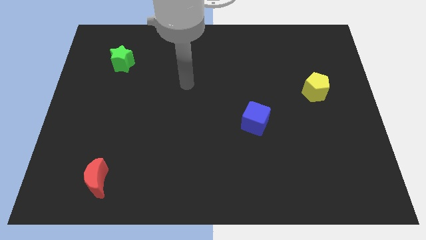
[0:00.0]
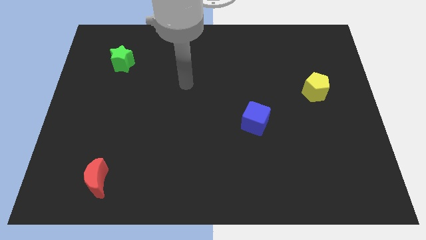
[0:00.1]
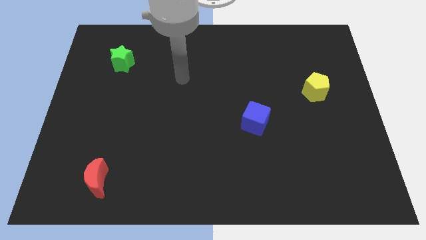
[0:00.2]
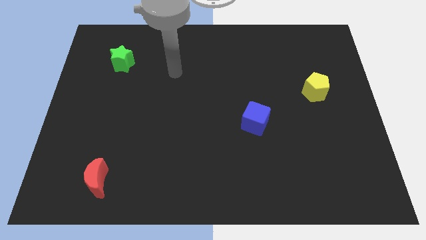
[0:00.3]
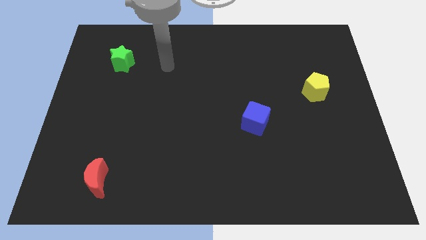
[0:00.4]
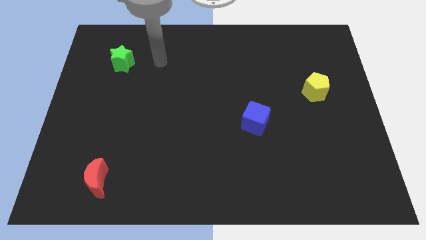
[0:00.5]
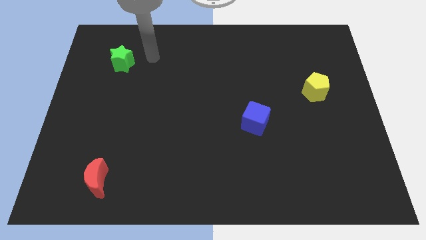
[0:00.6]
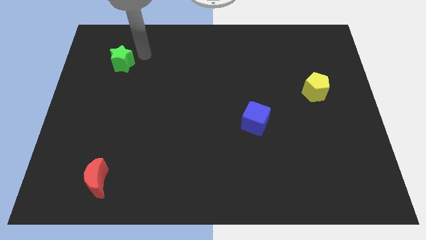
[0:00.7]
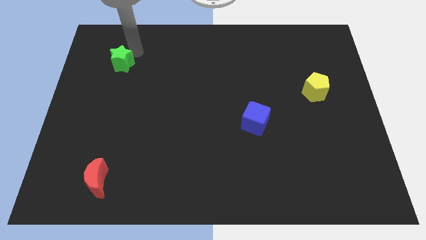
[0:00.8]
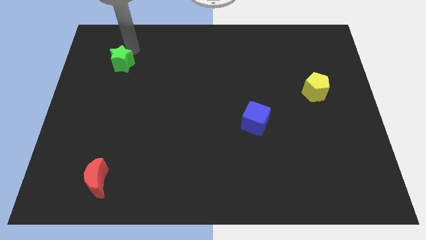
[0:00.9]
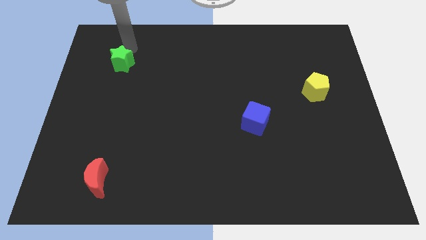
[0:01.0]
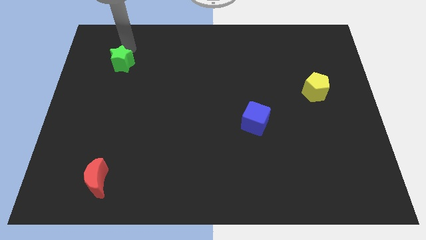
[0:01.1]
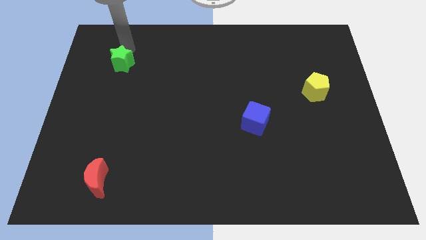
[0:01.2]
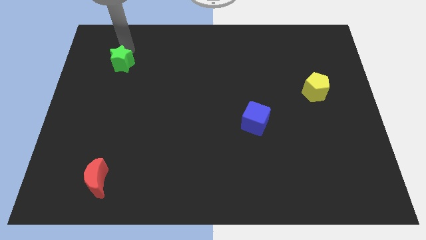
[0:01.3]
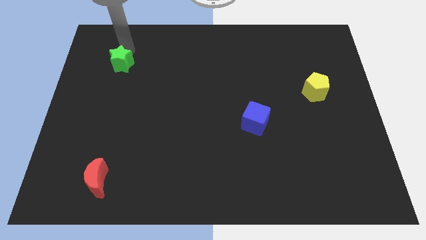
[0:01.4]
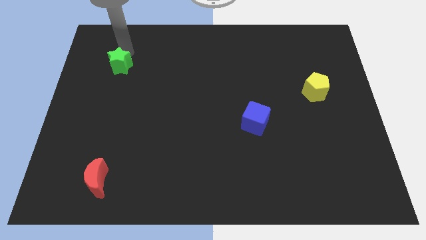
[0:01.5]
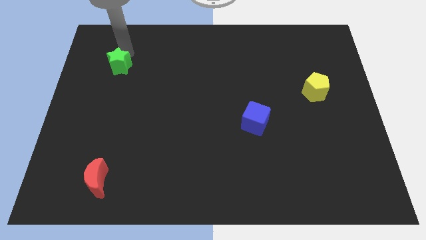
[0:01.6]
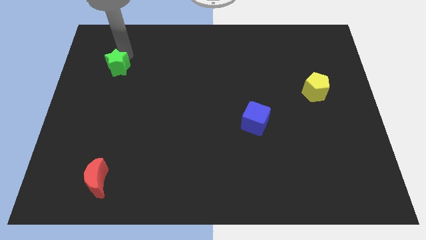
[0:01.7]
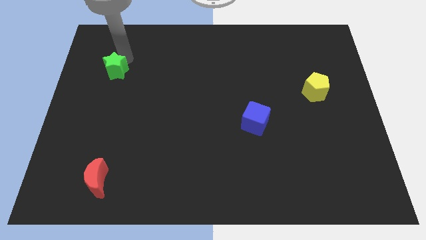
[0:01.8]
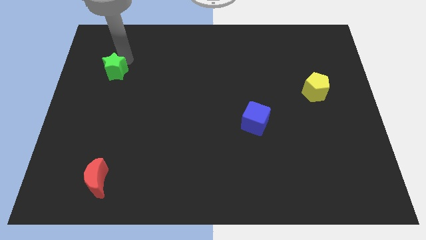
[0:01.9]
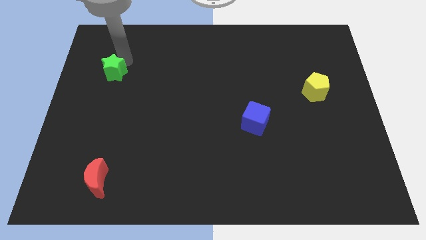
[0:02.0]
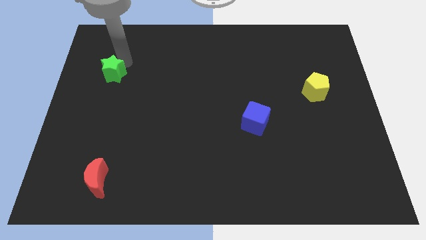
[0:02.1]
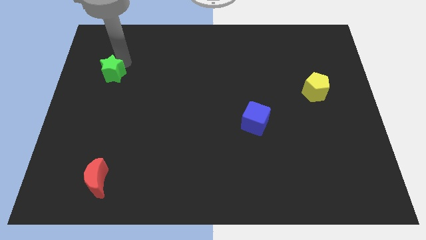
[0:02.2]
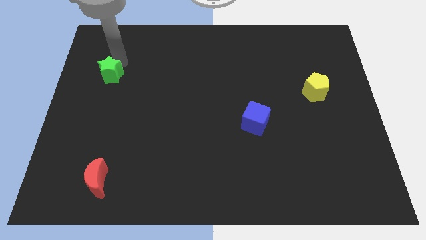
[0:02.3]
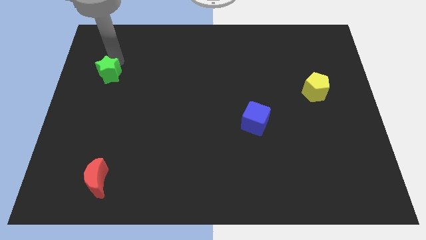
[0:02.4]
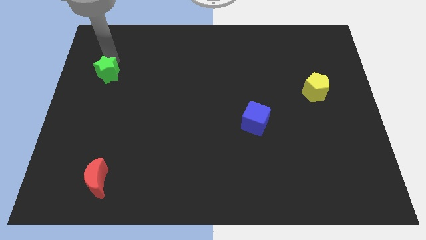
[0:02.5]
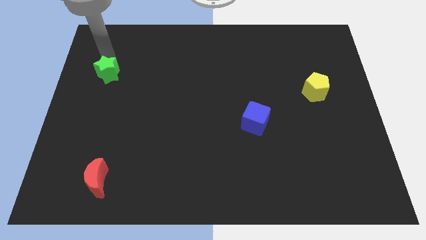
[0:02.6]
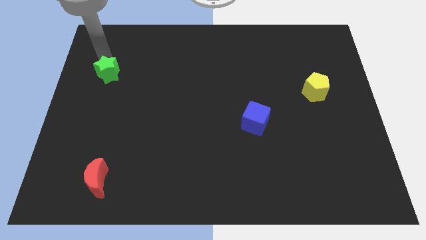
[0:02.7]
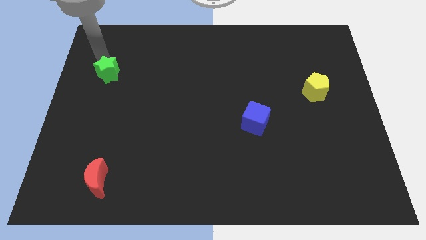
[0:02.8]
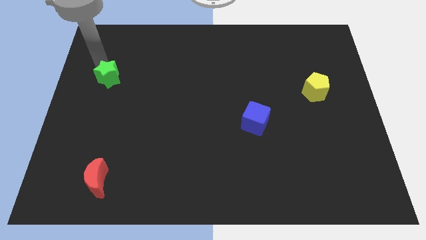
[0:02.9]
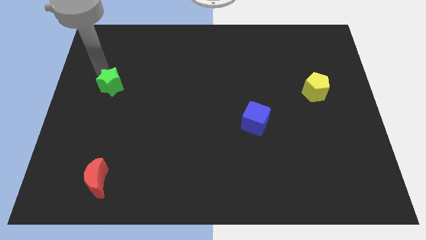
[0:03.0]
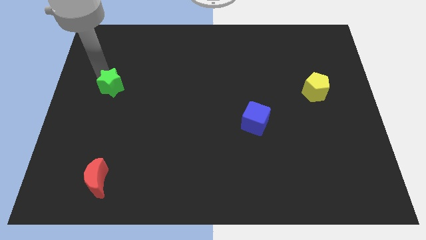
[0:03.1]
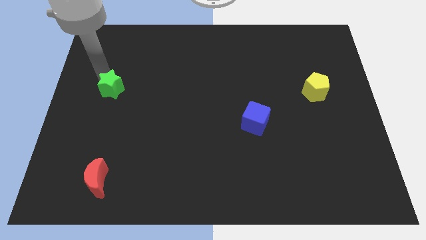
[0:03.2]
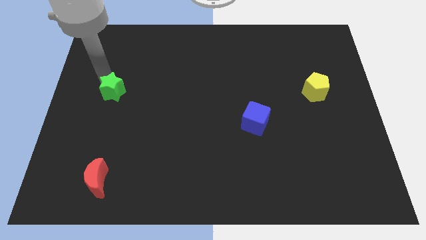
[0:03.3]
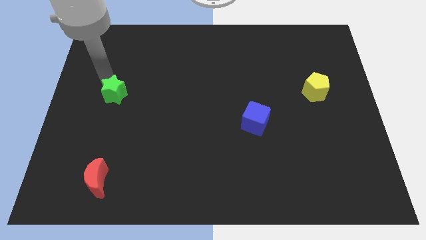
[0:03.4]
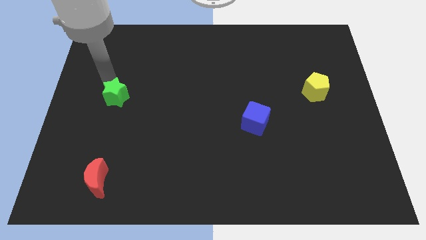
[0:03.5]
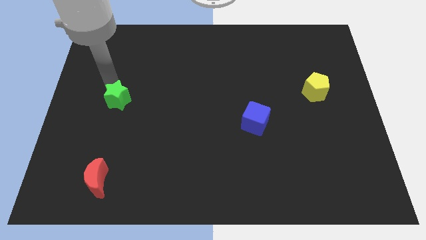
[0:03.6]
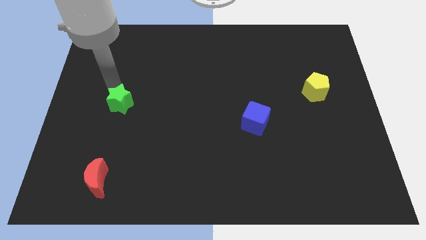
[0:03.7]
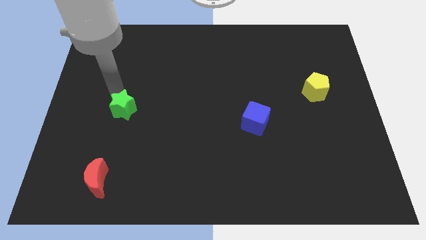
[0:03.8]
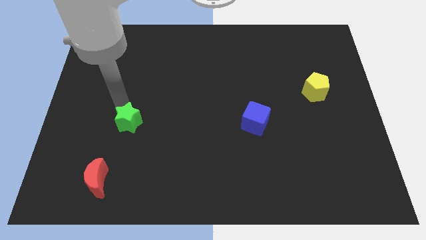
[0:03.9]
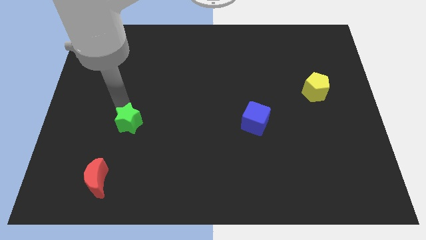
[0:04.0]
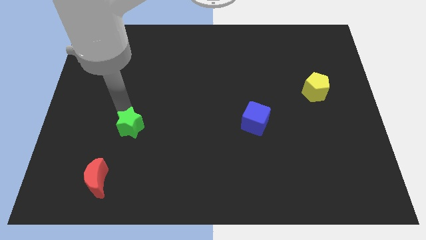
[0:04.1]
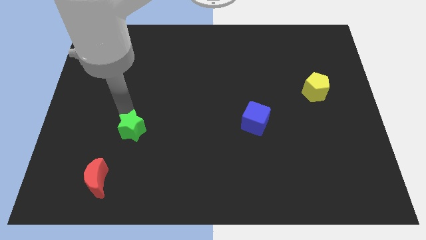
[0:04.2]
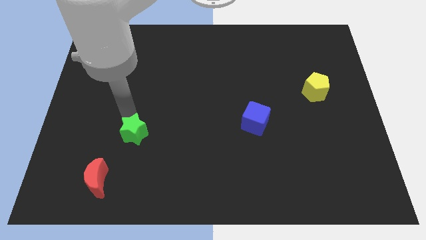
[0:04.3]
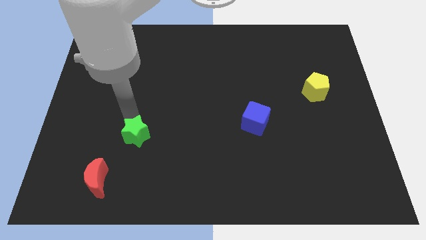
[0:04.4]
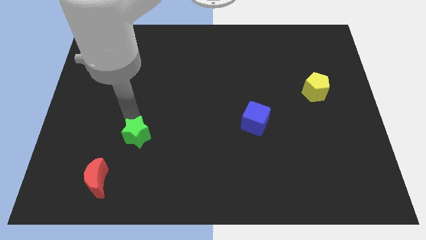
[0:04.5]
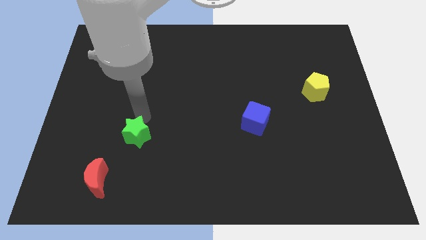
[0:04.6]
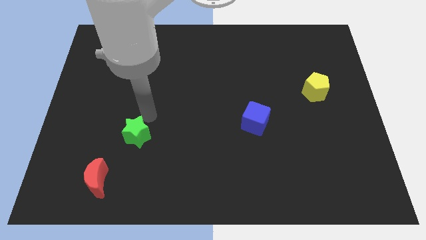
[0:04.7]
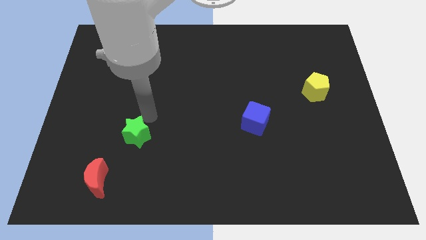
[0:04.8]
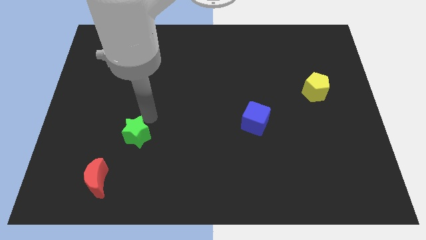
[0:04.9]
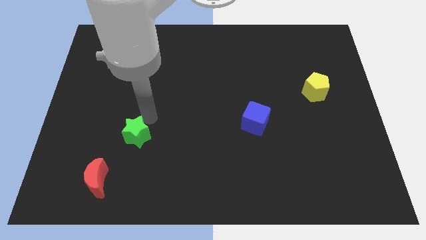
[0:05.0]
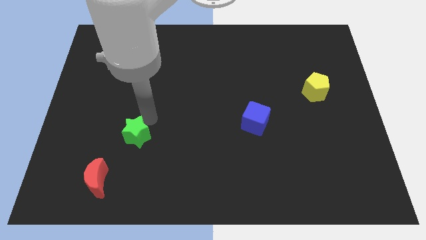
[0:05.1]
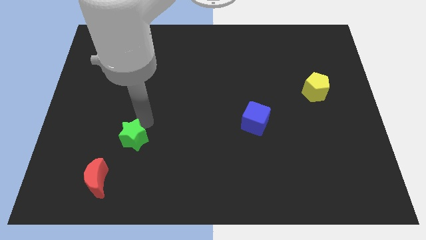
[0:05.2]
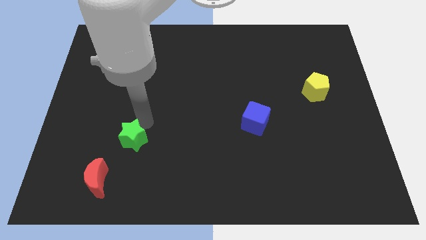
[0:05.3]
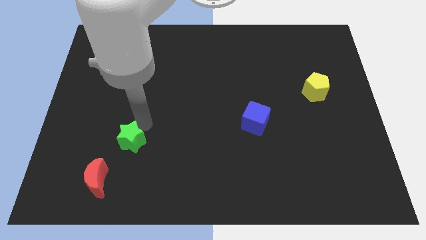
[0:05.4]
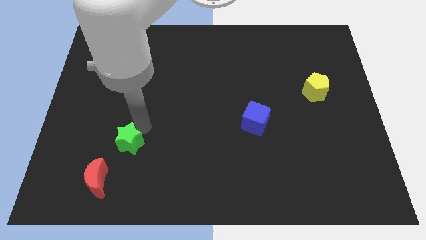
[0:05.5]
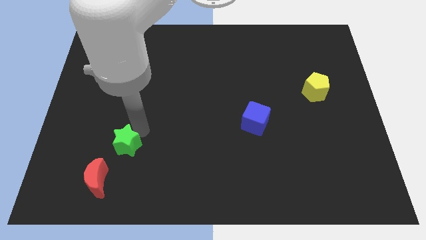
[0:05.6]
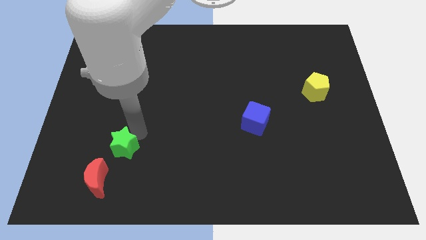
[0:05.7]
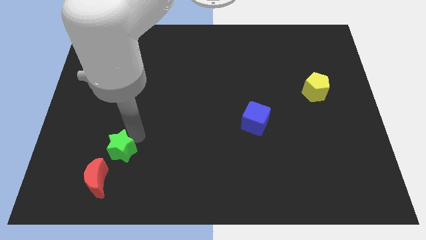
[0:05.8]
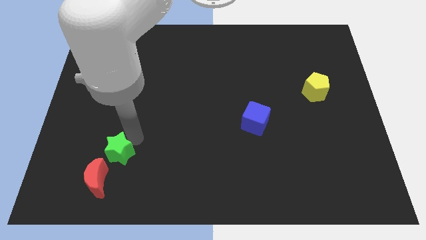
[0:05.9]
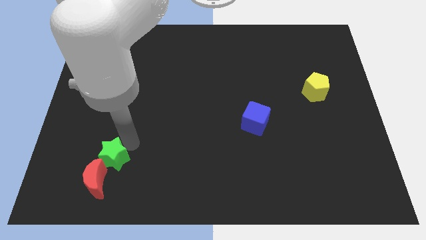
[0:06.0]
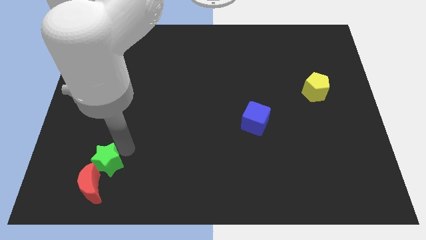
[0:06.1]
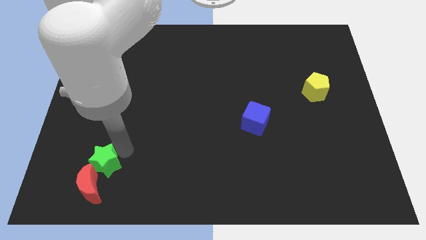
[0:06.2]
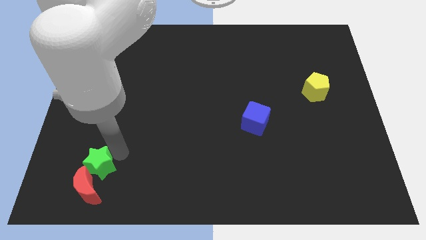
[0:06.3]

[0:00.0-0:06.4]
push the green star next to the moon

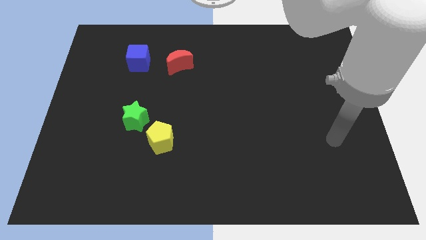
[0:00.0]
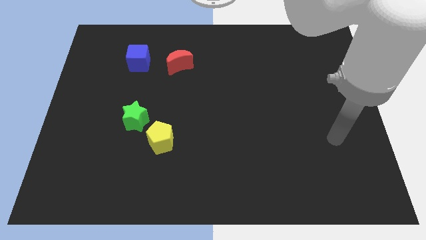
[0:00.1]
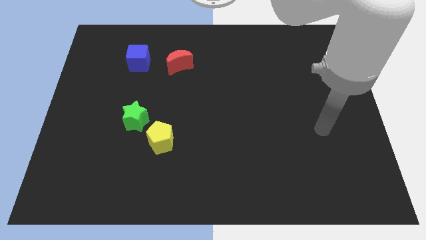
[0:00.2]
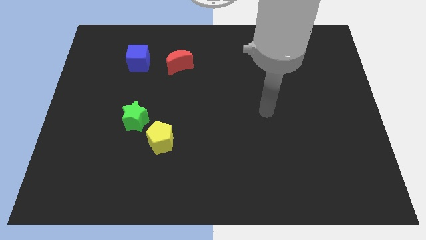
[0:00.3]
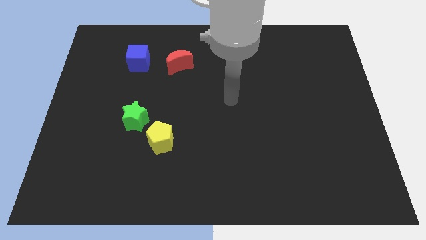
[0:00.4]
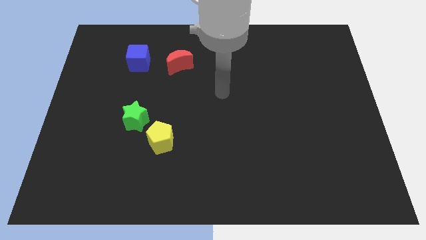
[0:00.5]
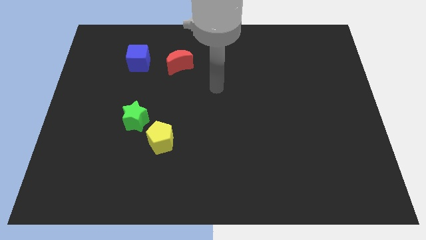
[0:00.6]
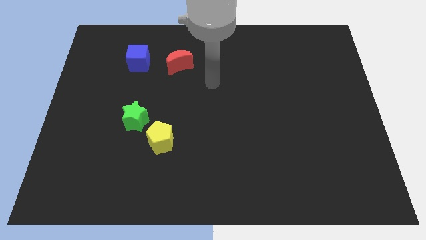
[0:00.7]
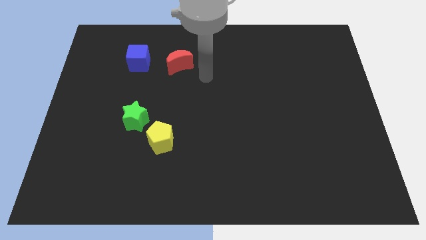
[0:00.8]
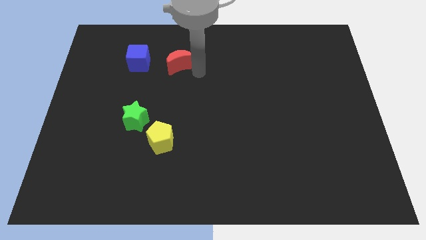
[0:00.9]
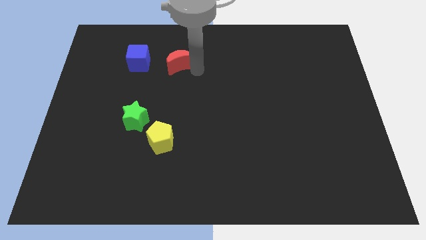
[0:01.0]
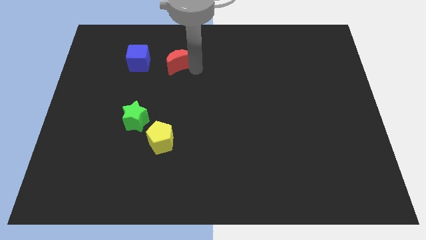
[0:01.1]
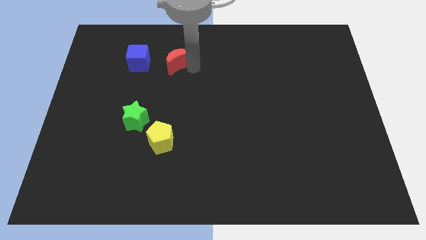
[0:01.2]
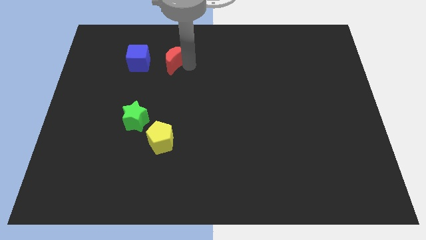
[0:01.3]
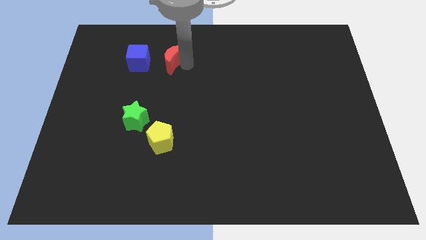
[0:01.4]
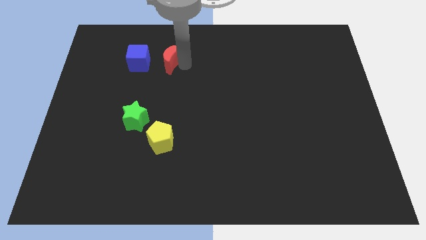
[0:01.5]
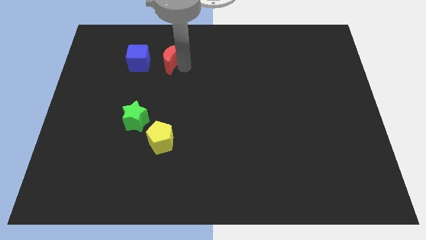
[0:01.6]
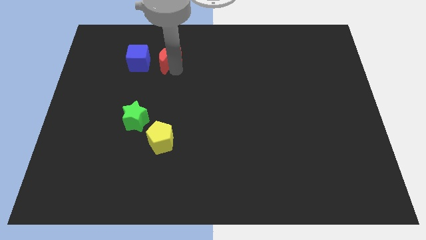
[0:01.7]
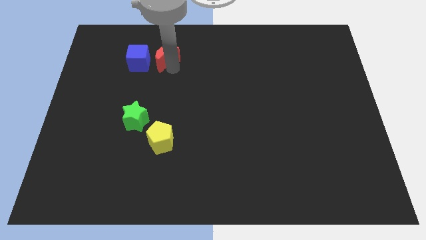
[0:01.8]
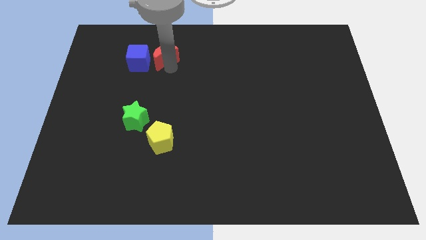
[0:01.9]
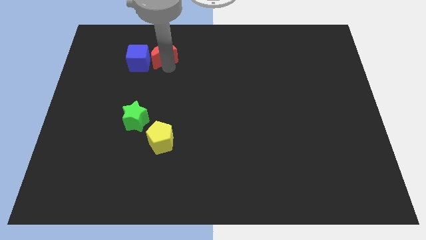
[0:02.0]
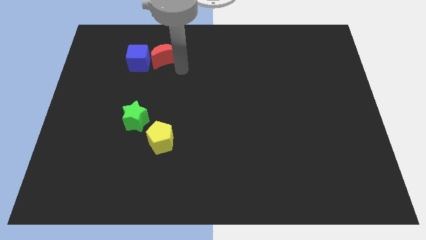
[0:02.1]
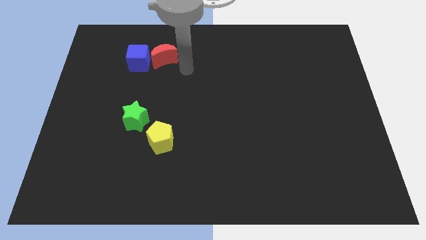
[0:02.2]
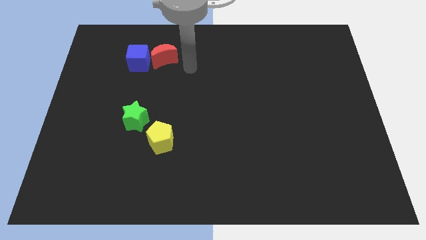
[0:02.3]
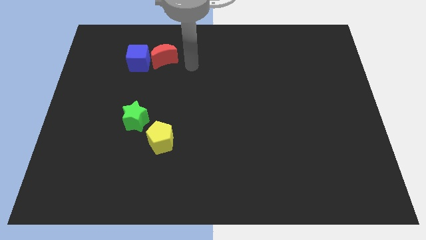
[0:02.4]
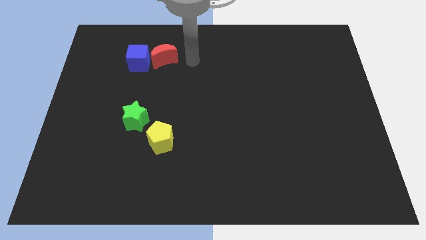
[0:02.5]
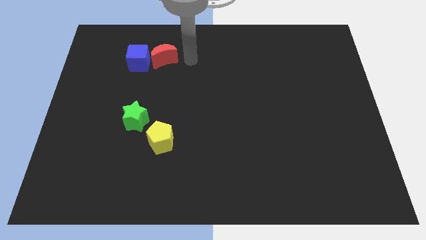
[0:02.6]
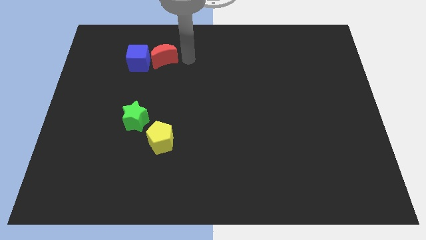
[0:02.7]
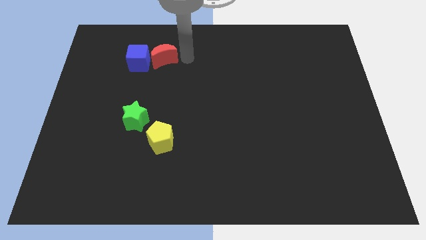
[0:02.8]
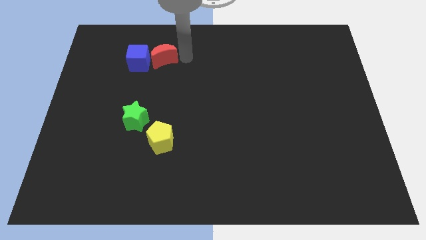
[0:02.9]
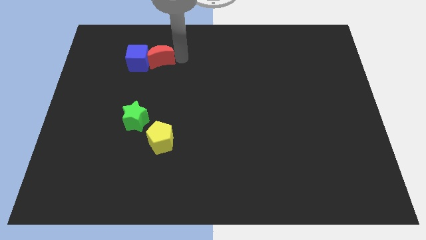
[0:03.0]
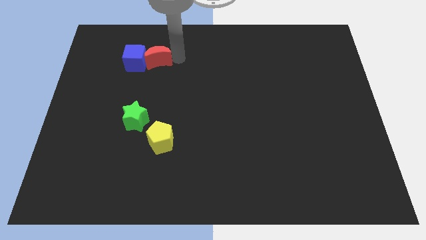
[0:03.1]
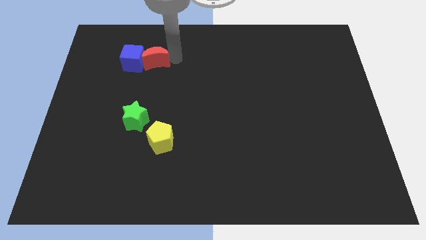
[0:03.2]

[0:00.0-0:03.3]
put the red block close to the blue cube
